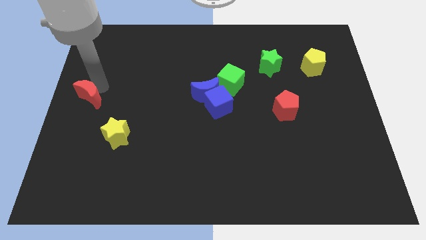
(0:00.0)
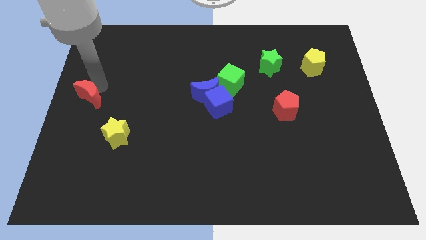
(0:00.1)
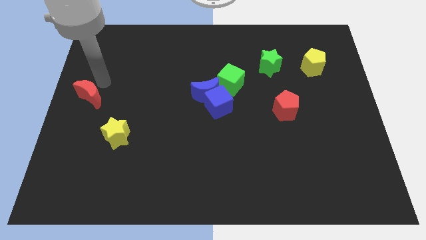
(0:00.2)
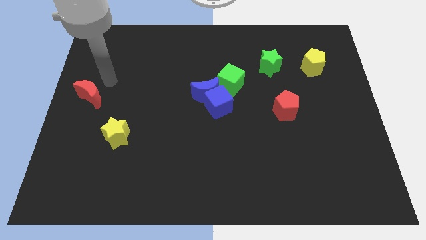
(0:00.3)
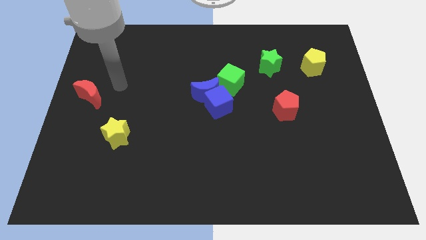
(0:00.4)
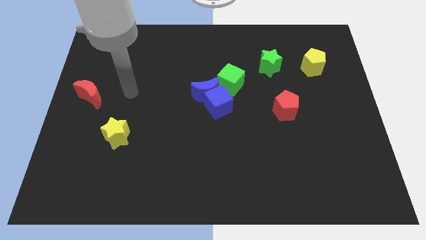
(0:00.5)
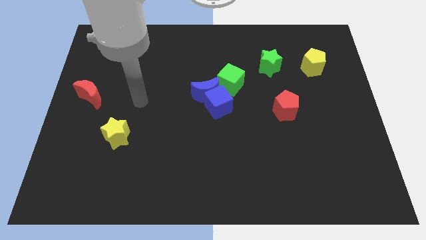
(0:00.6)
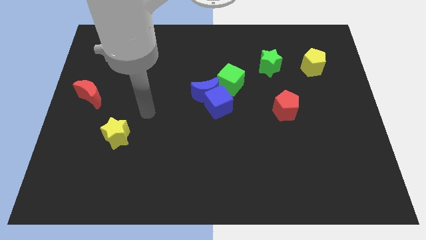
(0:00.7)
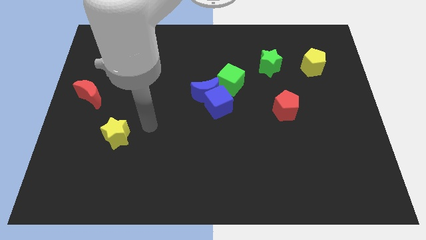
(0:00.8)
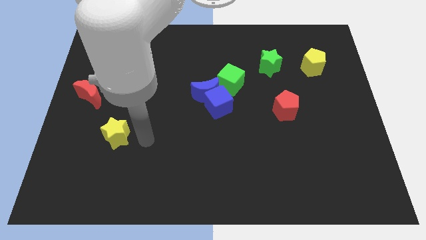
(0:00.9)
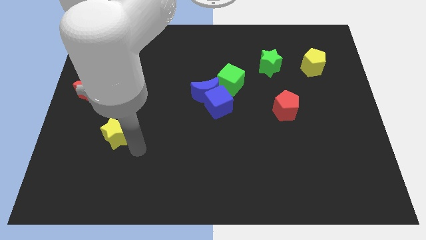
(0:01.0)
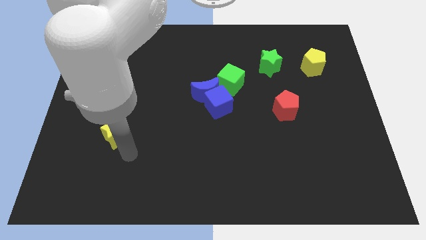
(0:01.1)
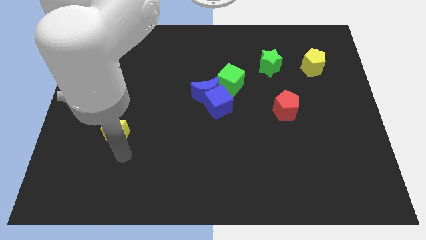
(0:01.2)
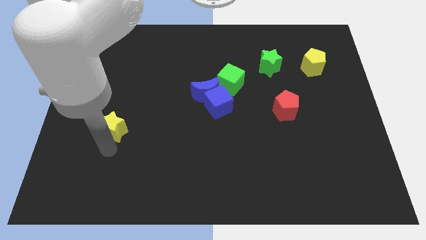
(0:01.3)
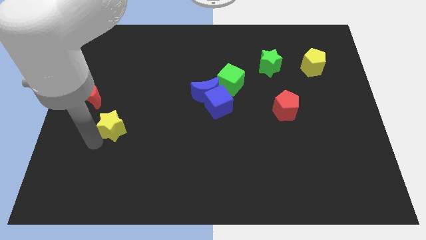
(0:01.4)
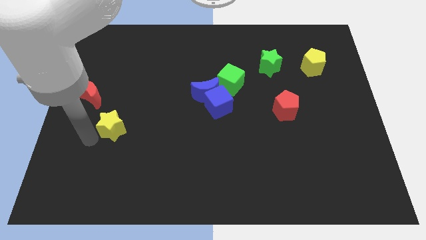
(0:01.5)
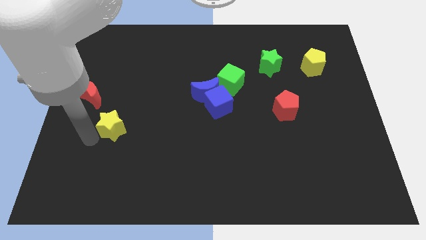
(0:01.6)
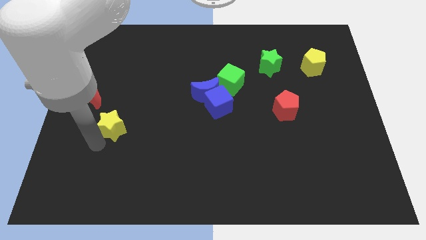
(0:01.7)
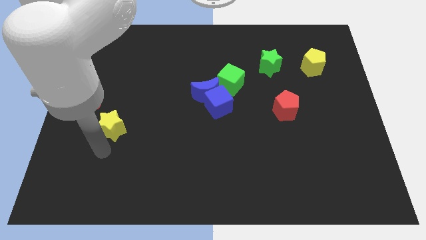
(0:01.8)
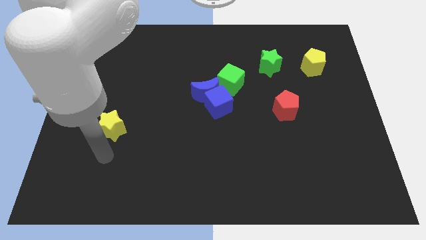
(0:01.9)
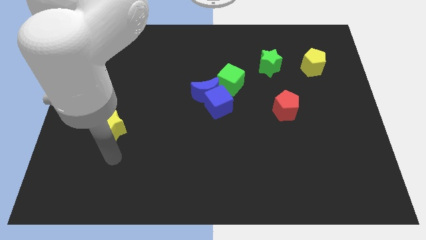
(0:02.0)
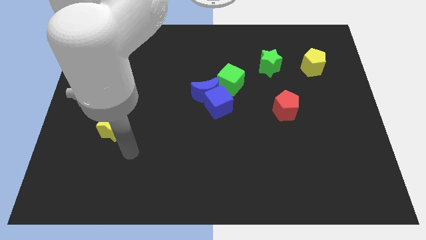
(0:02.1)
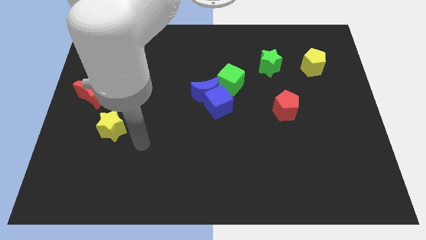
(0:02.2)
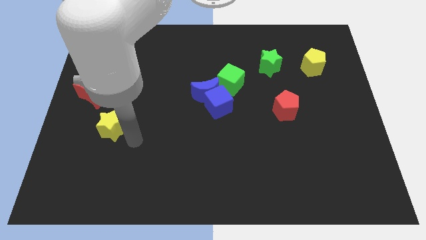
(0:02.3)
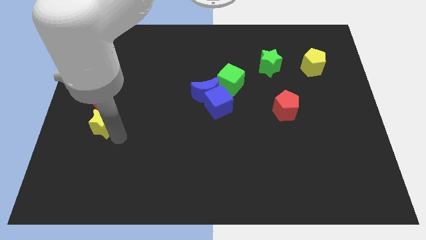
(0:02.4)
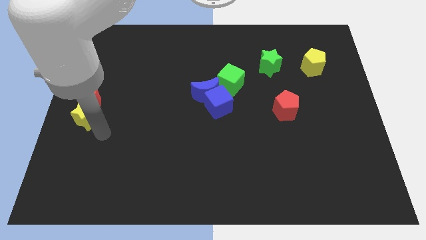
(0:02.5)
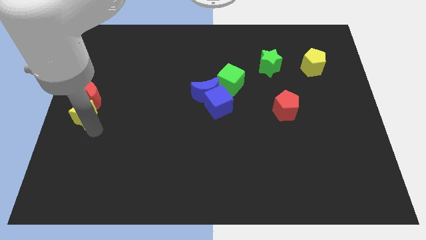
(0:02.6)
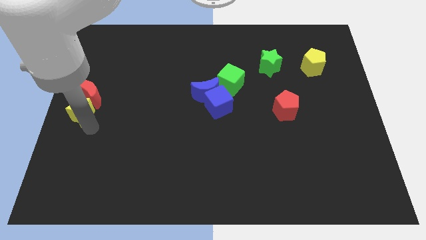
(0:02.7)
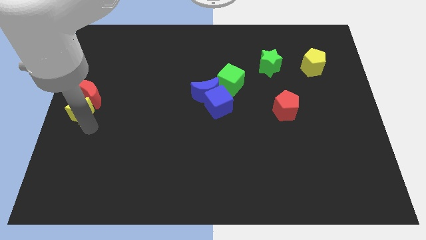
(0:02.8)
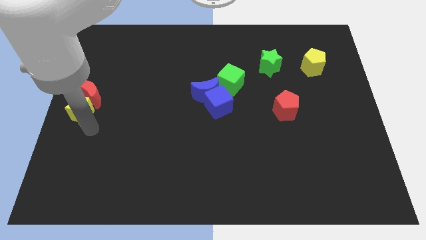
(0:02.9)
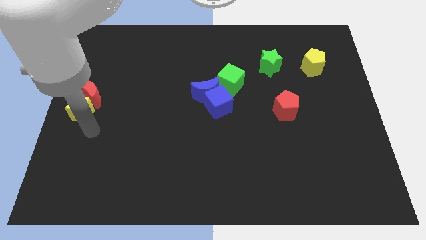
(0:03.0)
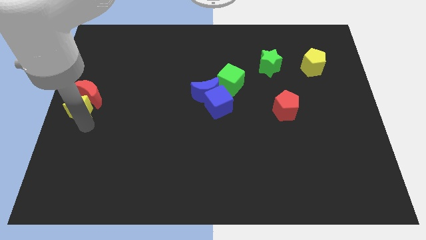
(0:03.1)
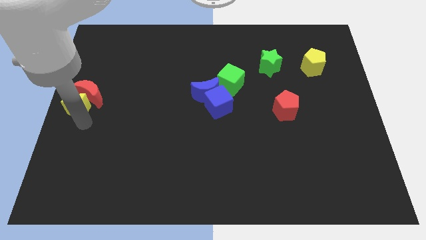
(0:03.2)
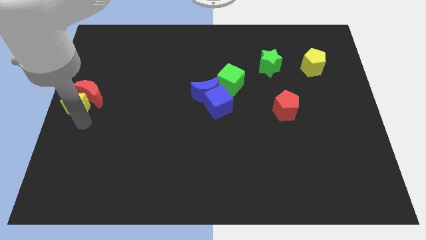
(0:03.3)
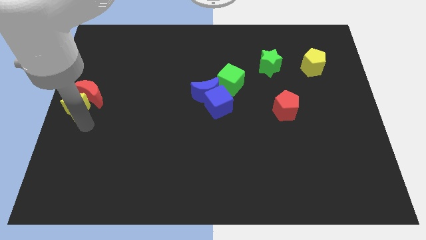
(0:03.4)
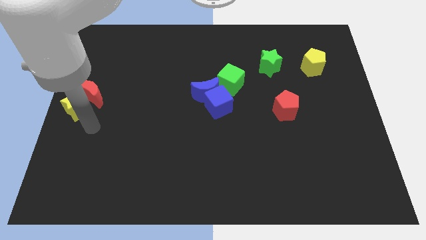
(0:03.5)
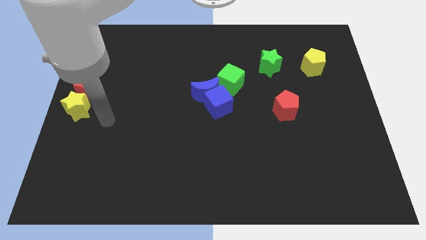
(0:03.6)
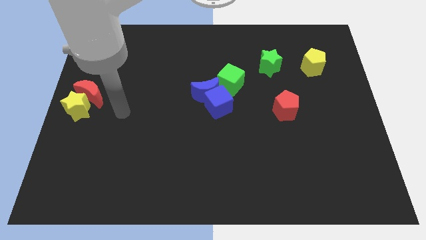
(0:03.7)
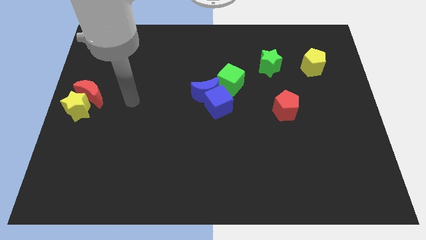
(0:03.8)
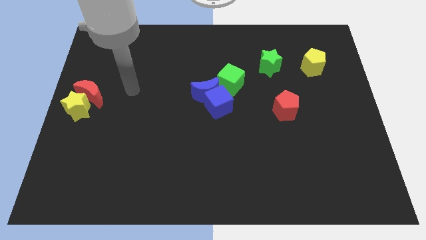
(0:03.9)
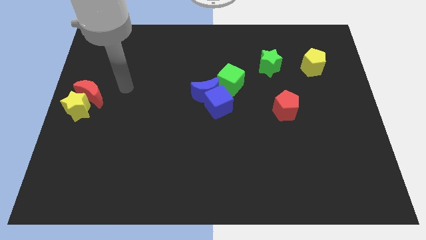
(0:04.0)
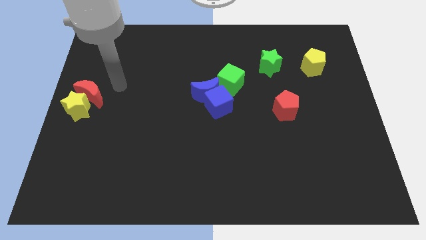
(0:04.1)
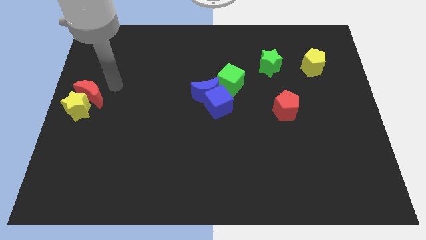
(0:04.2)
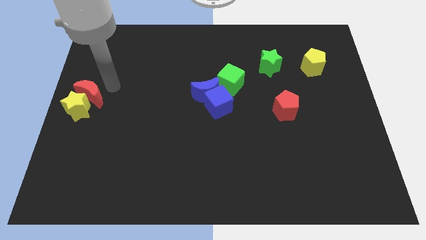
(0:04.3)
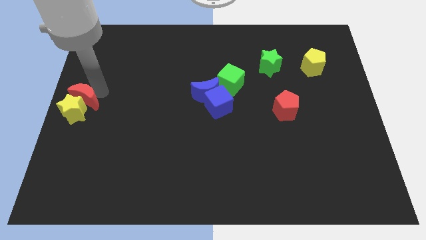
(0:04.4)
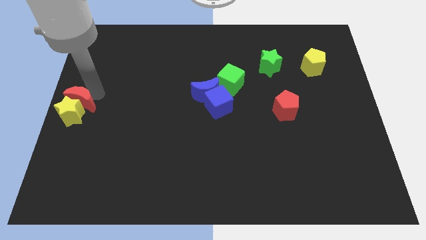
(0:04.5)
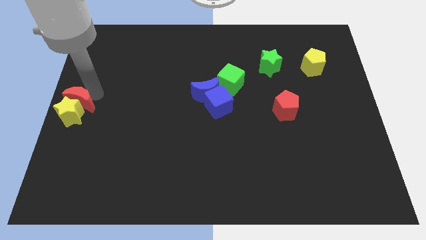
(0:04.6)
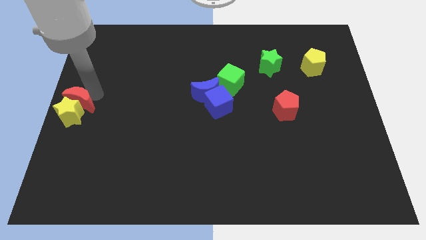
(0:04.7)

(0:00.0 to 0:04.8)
arrange the yellow star and the red crescent at the center left of the board

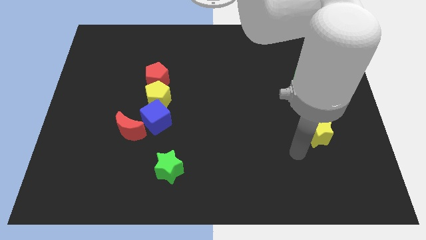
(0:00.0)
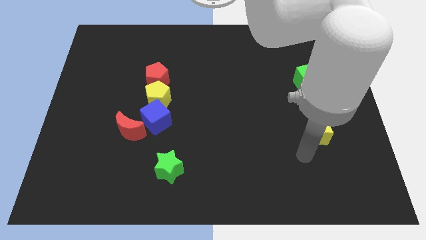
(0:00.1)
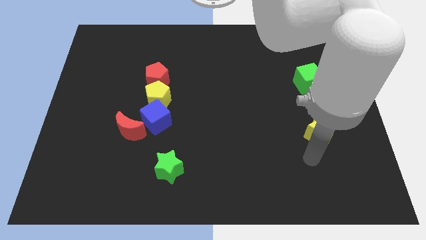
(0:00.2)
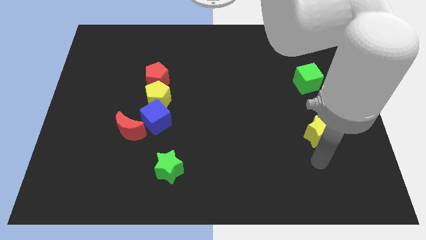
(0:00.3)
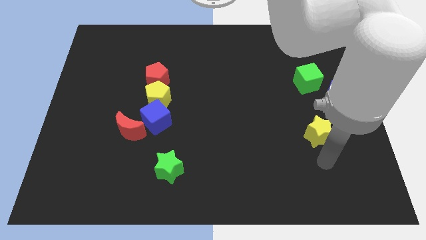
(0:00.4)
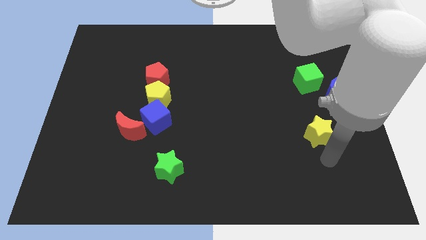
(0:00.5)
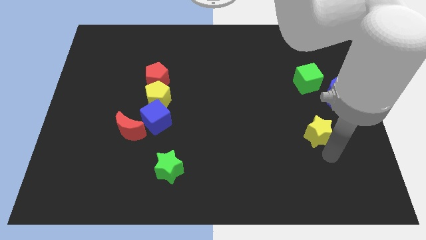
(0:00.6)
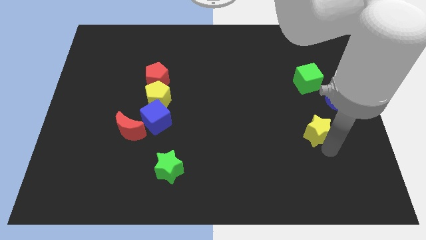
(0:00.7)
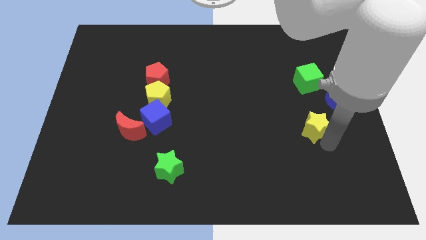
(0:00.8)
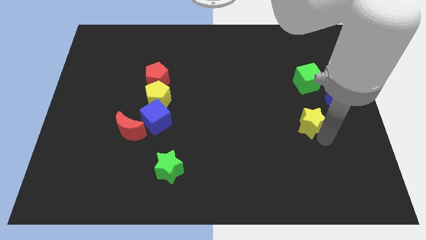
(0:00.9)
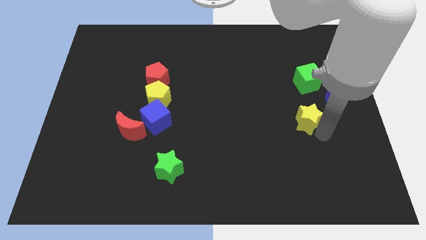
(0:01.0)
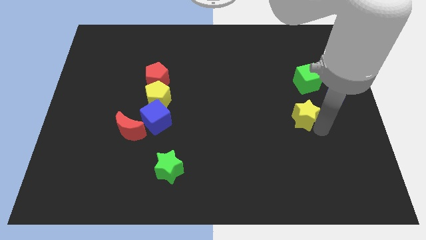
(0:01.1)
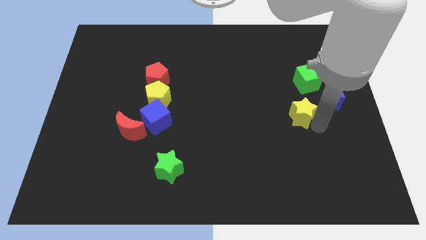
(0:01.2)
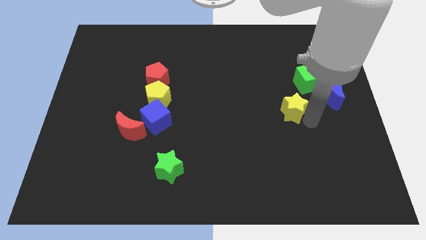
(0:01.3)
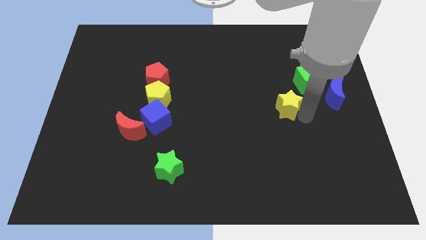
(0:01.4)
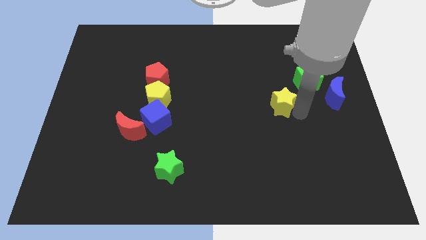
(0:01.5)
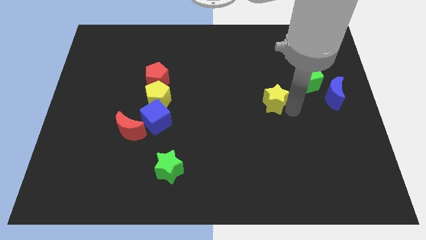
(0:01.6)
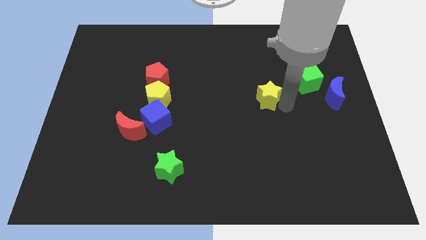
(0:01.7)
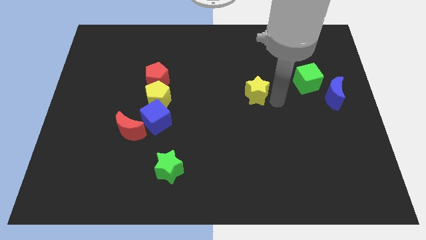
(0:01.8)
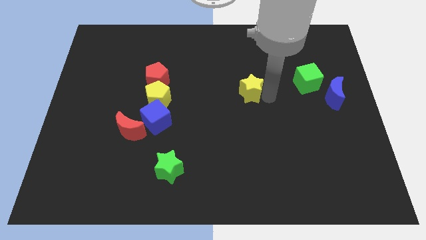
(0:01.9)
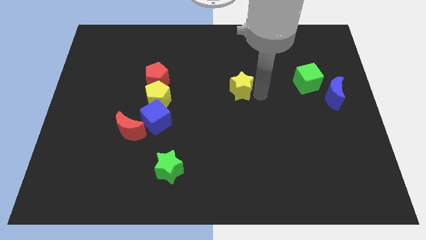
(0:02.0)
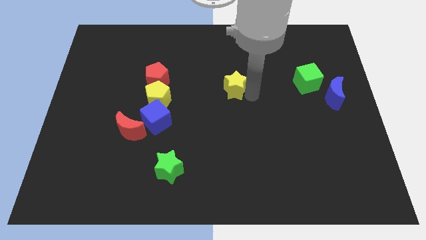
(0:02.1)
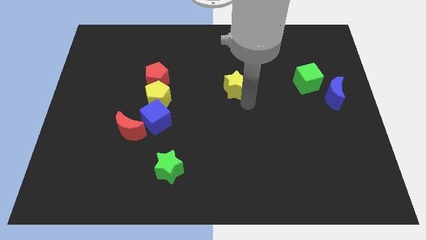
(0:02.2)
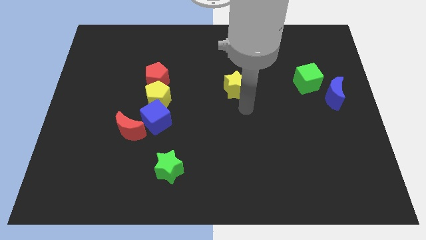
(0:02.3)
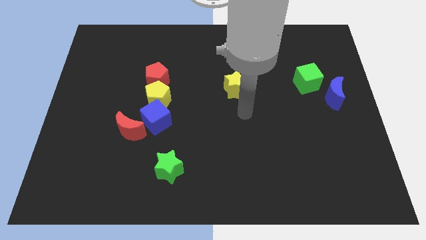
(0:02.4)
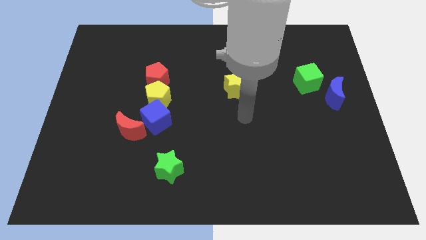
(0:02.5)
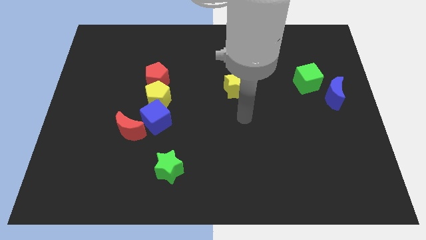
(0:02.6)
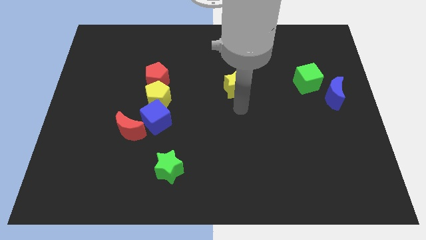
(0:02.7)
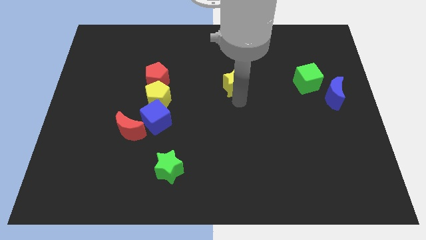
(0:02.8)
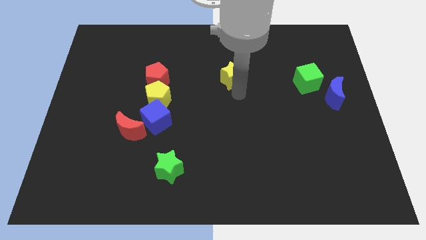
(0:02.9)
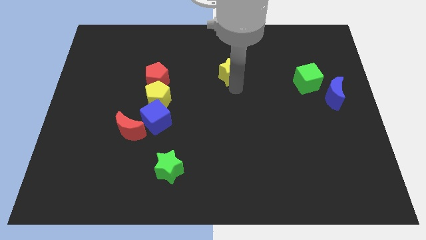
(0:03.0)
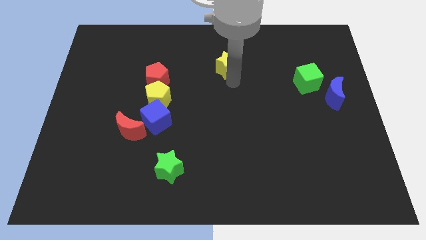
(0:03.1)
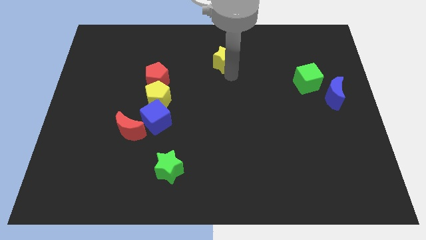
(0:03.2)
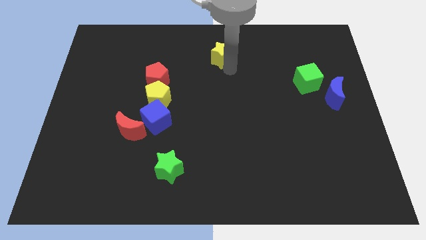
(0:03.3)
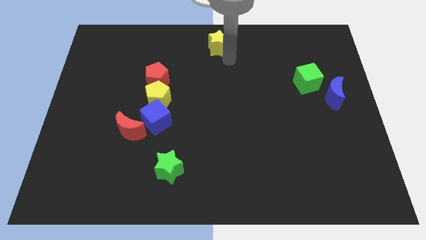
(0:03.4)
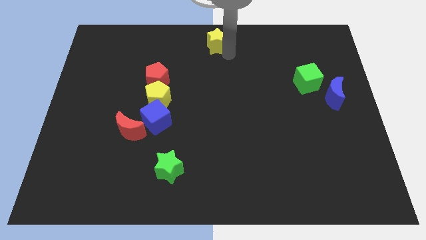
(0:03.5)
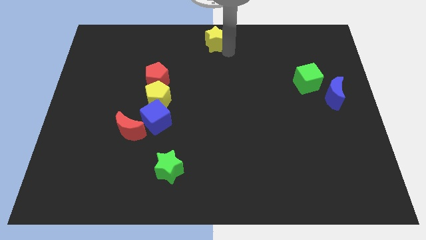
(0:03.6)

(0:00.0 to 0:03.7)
push the yellow pentagon to the top center of the board

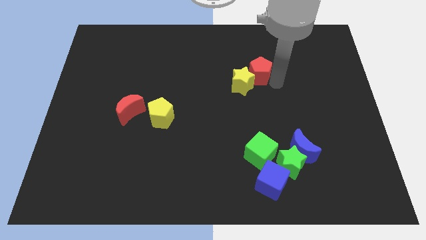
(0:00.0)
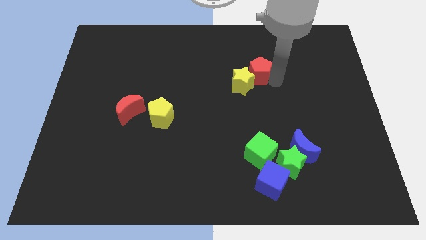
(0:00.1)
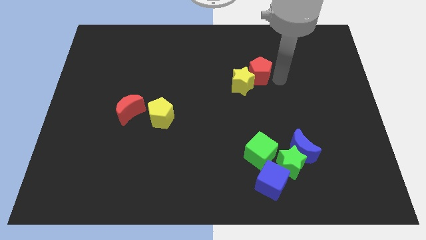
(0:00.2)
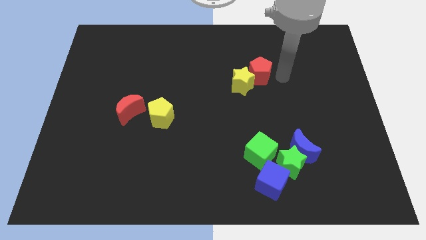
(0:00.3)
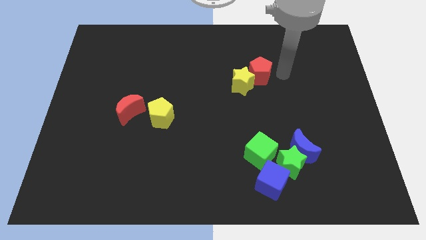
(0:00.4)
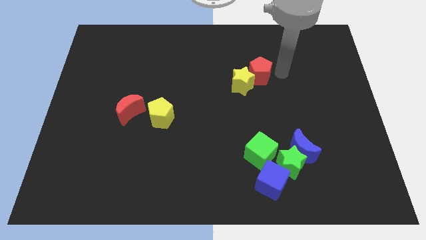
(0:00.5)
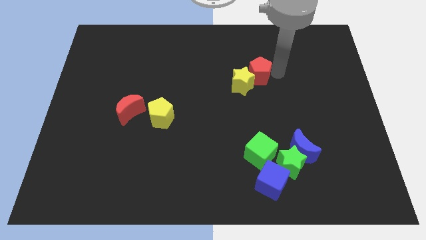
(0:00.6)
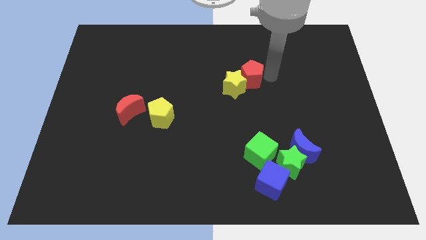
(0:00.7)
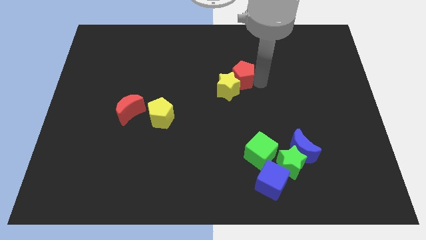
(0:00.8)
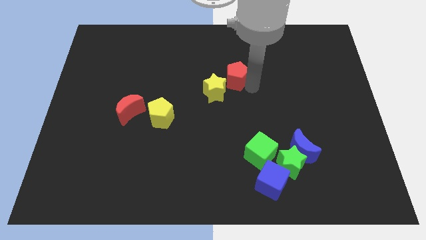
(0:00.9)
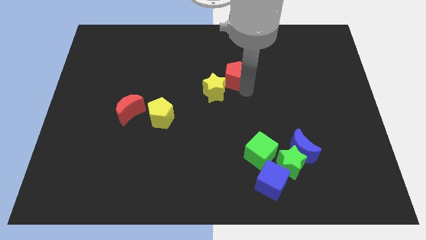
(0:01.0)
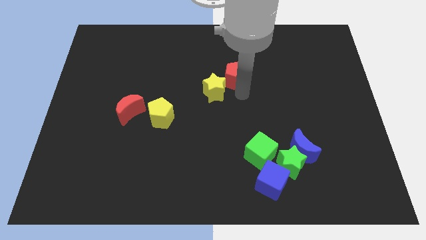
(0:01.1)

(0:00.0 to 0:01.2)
push the red pentagon into the yellow star
